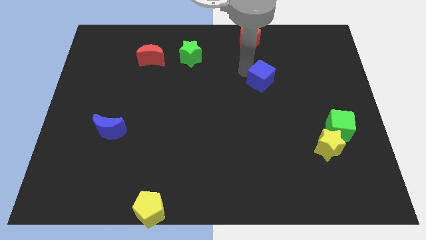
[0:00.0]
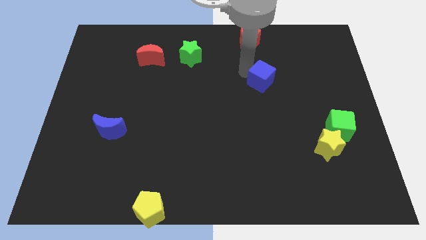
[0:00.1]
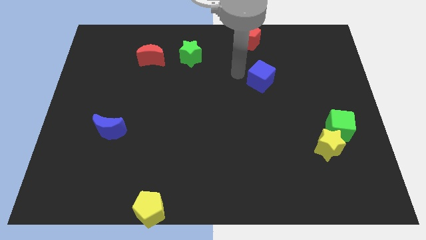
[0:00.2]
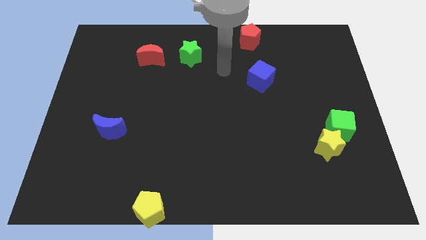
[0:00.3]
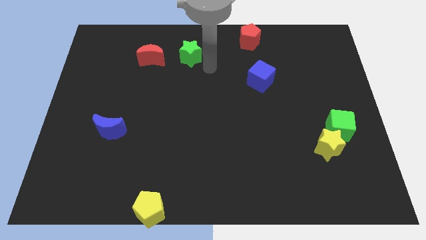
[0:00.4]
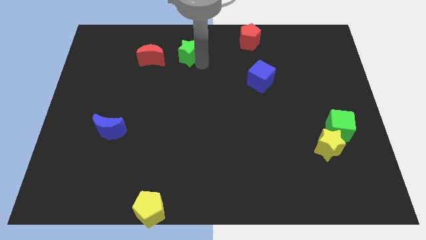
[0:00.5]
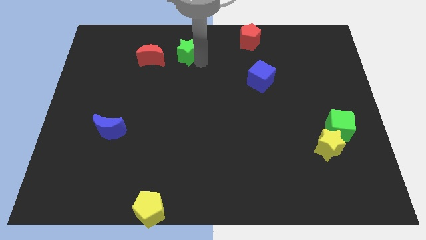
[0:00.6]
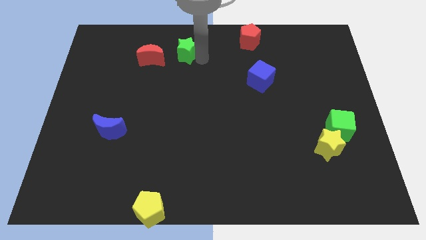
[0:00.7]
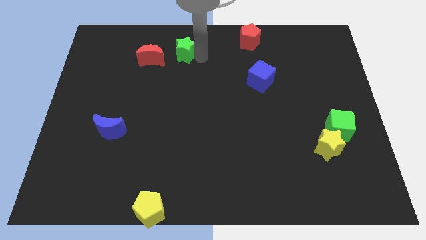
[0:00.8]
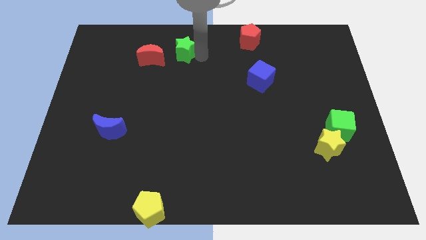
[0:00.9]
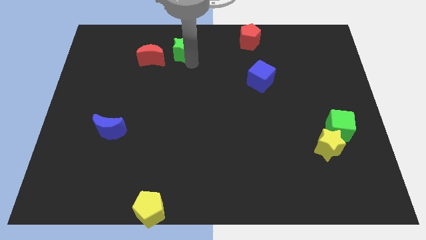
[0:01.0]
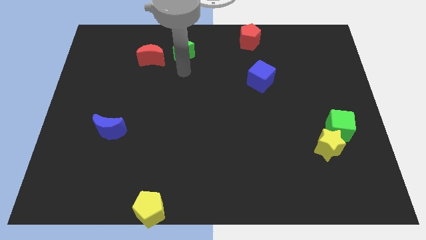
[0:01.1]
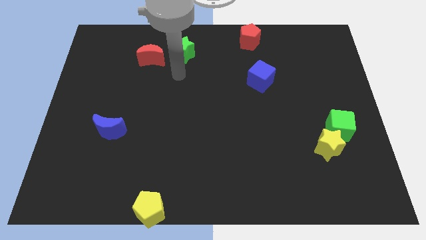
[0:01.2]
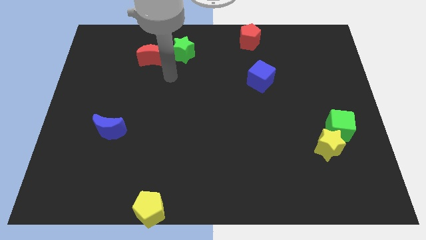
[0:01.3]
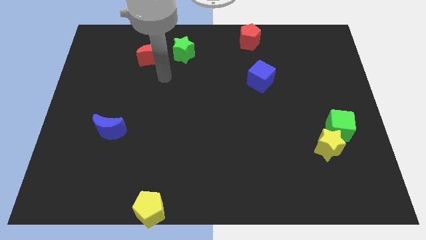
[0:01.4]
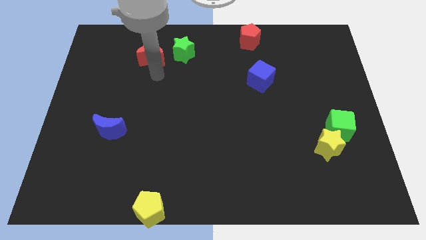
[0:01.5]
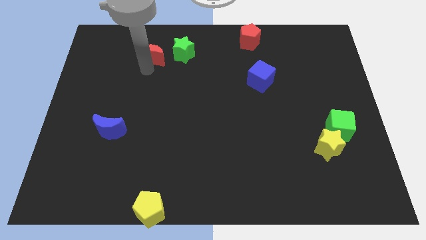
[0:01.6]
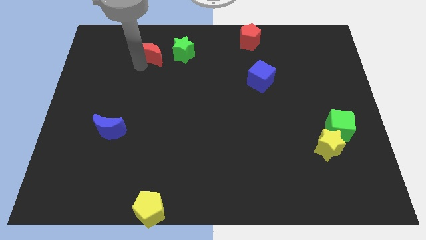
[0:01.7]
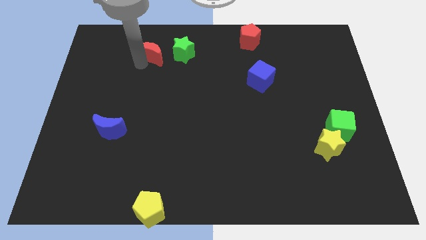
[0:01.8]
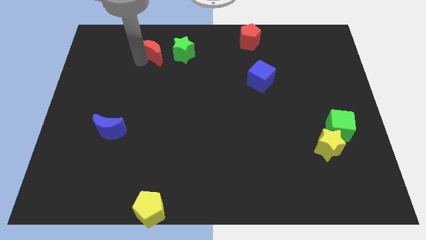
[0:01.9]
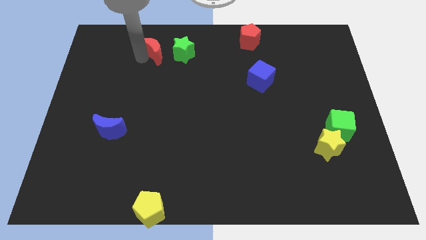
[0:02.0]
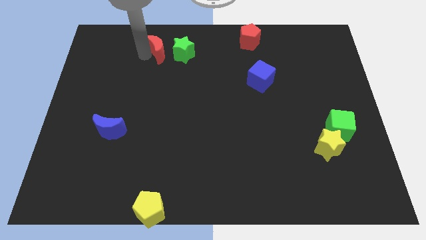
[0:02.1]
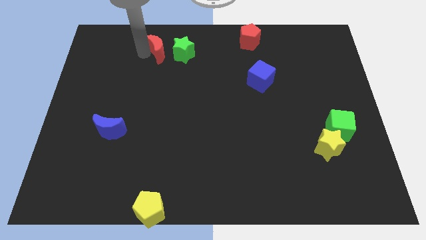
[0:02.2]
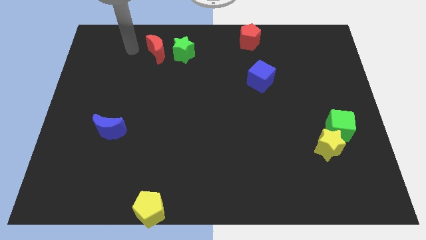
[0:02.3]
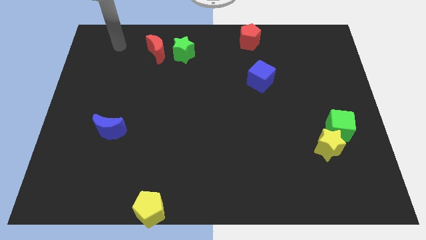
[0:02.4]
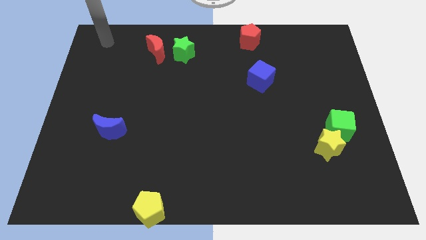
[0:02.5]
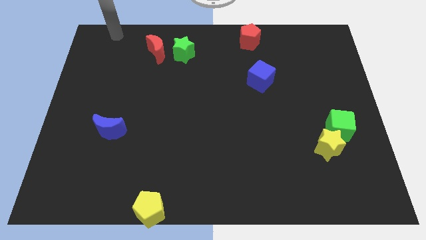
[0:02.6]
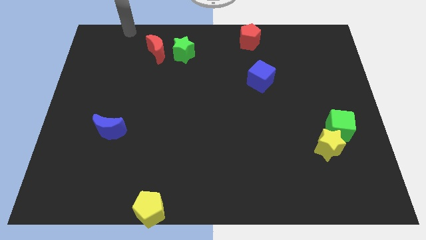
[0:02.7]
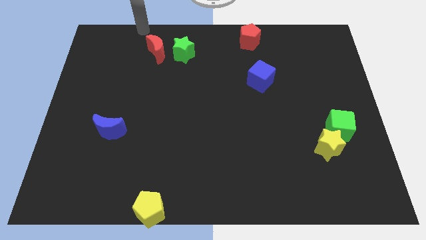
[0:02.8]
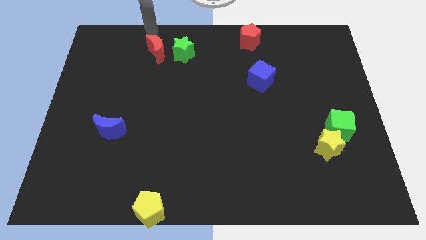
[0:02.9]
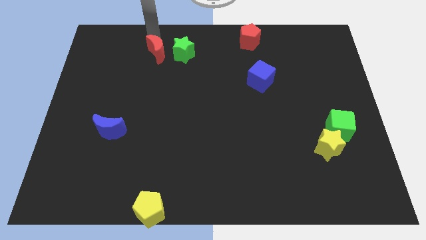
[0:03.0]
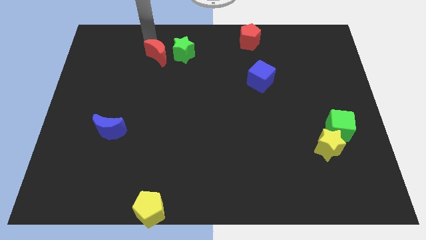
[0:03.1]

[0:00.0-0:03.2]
move the green star and red moon upward direction

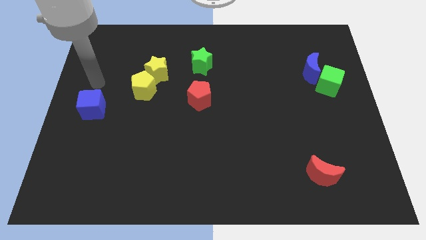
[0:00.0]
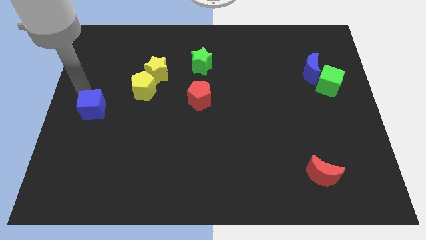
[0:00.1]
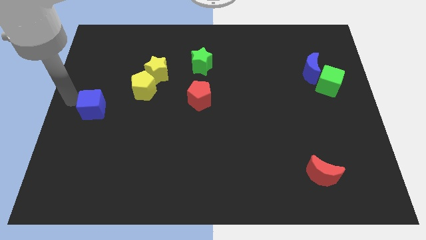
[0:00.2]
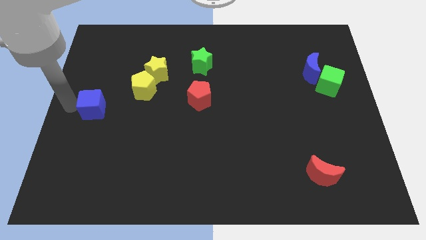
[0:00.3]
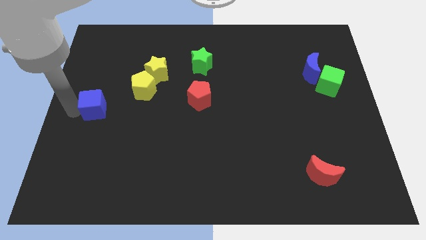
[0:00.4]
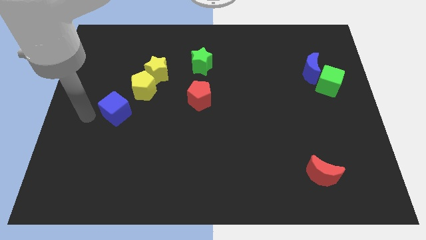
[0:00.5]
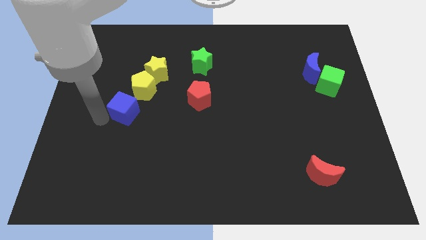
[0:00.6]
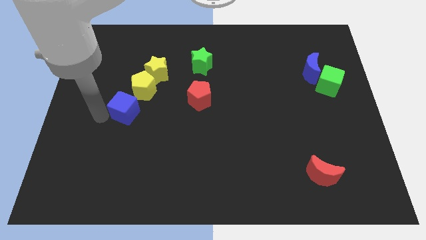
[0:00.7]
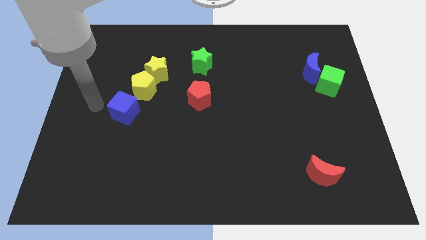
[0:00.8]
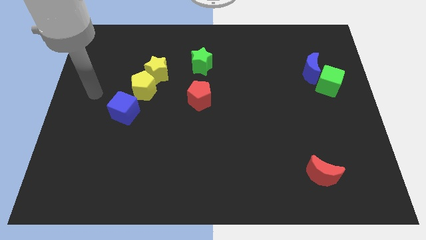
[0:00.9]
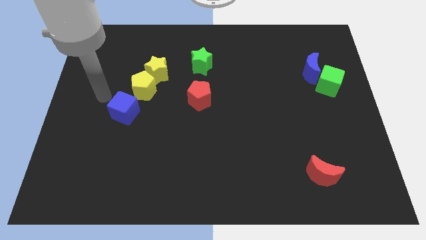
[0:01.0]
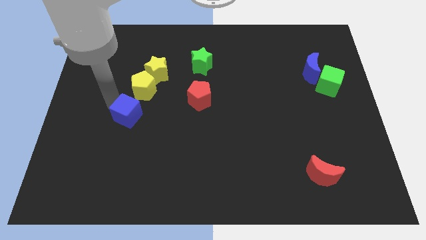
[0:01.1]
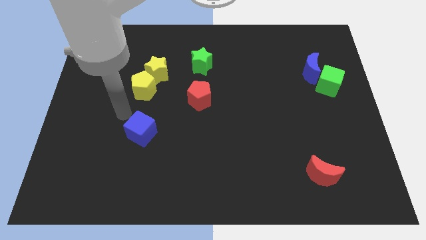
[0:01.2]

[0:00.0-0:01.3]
bring the blue cube at the bottom side of the yellow blocks

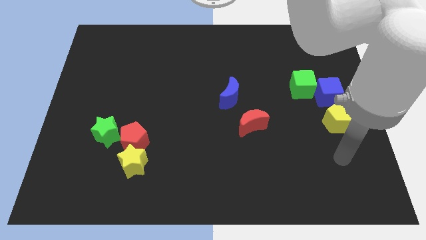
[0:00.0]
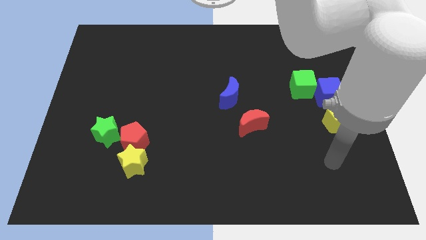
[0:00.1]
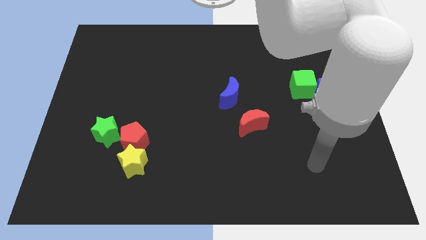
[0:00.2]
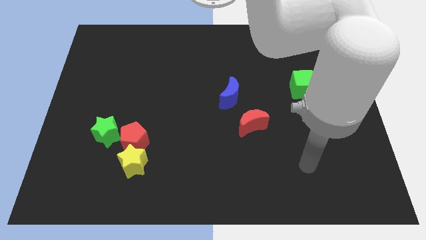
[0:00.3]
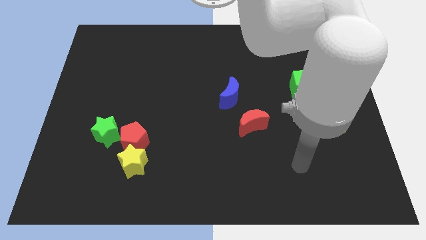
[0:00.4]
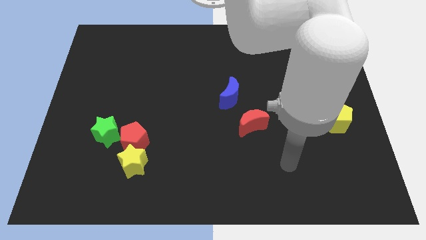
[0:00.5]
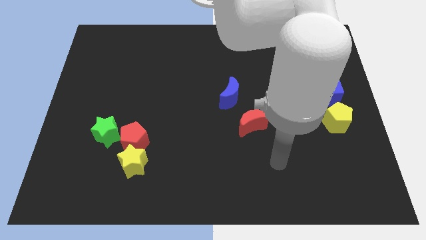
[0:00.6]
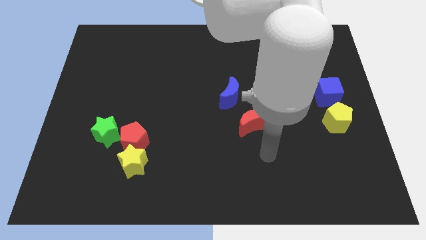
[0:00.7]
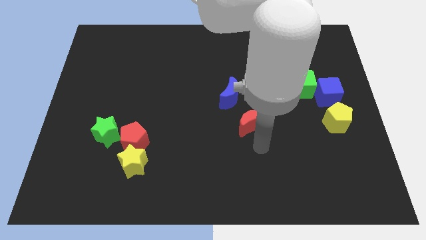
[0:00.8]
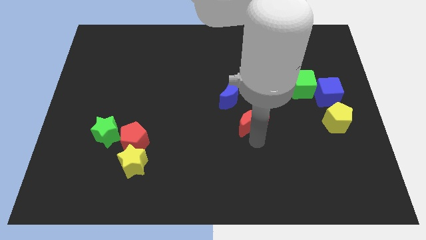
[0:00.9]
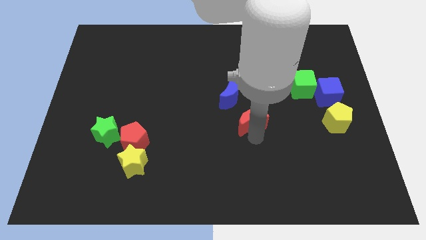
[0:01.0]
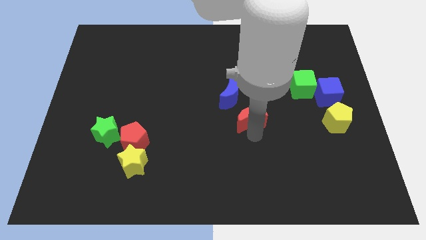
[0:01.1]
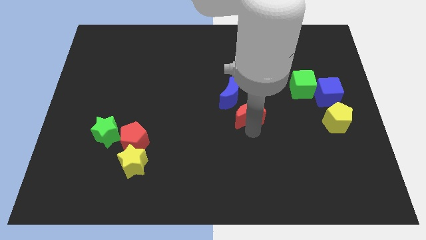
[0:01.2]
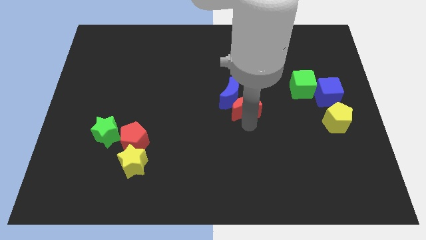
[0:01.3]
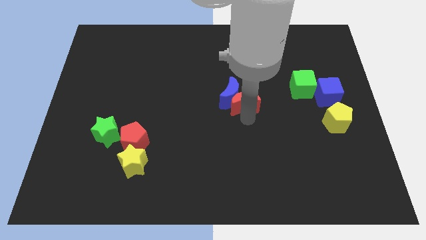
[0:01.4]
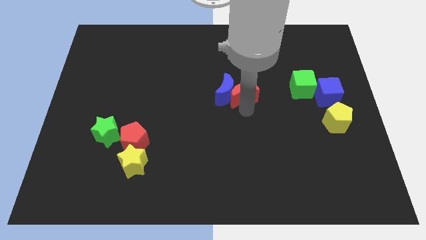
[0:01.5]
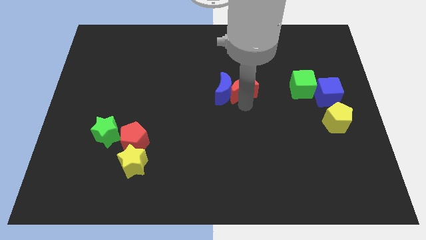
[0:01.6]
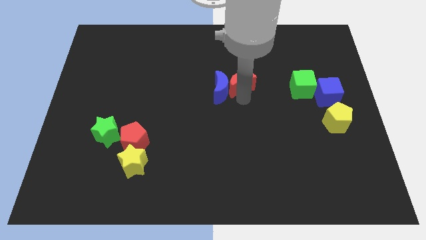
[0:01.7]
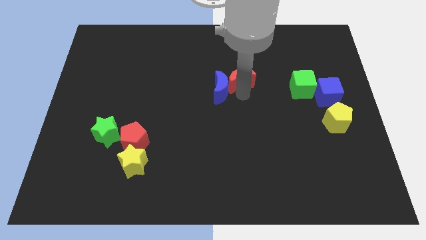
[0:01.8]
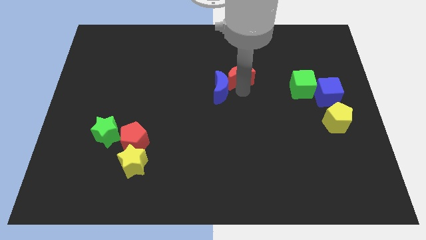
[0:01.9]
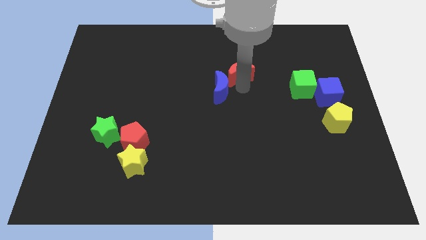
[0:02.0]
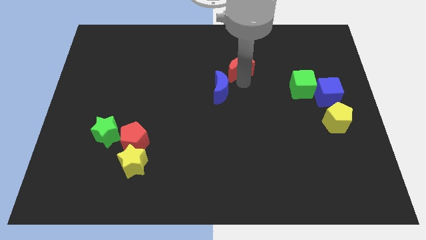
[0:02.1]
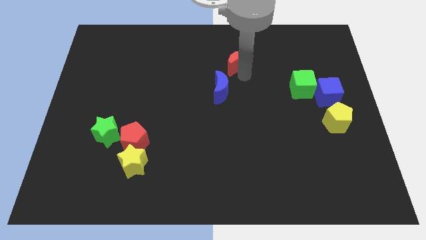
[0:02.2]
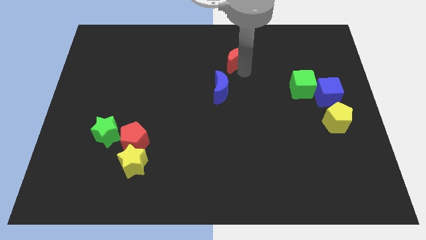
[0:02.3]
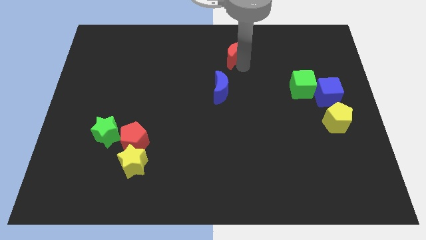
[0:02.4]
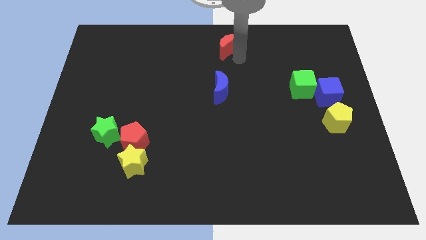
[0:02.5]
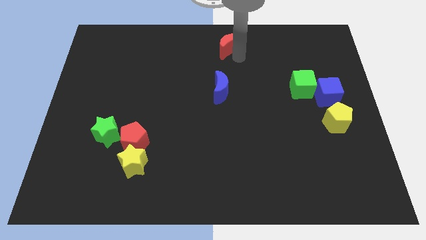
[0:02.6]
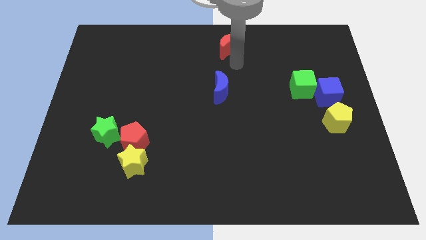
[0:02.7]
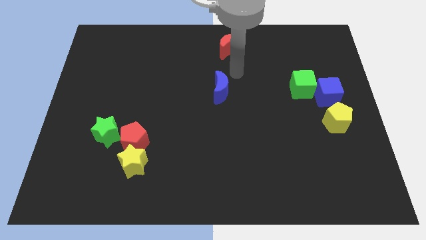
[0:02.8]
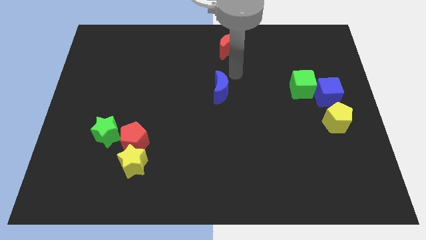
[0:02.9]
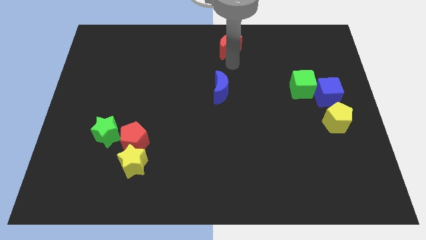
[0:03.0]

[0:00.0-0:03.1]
place red moon above the blue moon

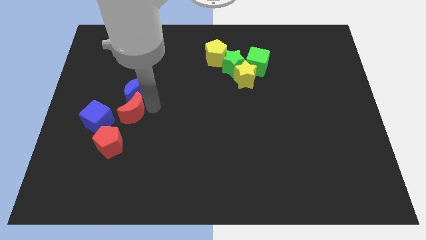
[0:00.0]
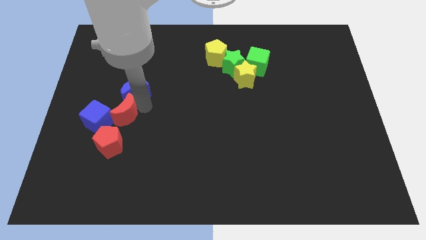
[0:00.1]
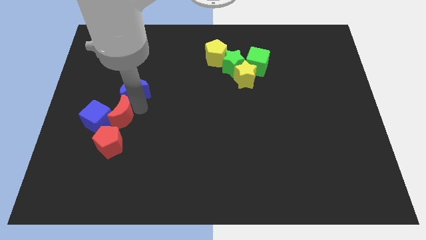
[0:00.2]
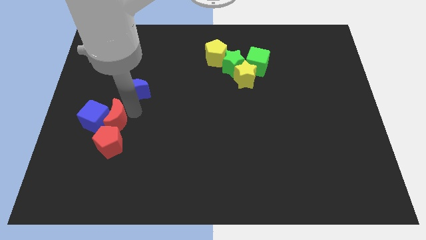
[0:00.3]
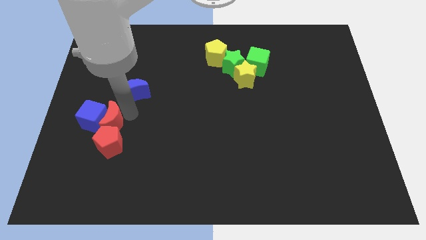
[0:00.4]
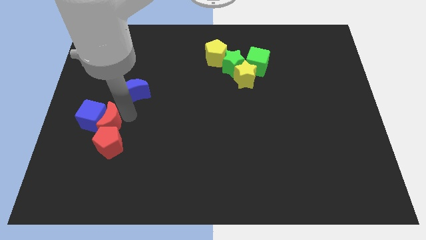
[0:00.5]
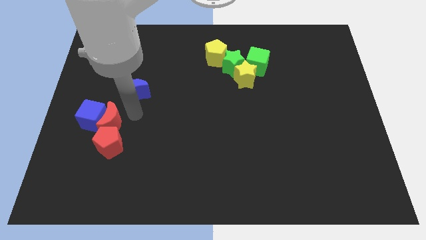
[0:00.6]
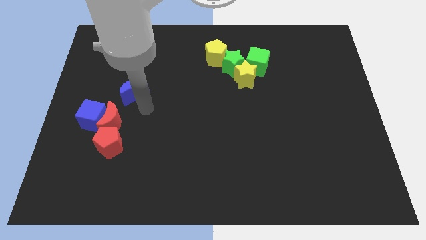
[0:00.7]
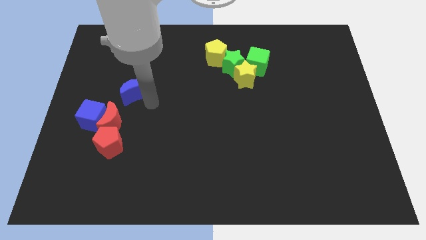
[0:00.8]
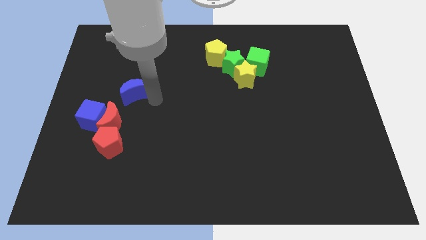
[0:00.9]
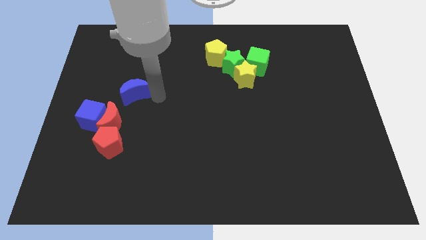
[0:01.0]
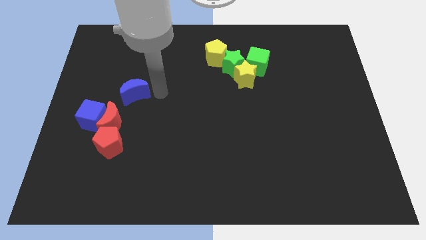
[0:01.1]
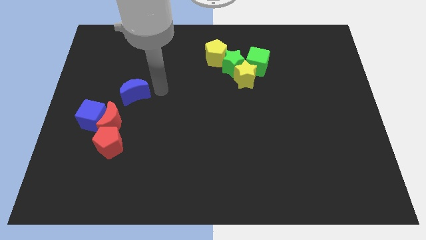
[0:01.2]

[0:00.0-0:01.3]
separate the crescents
